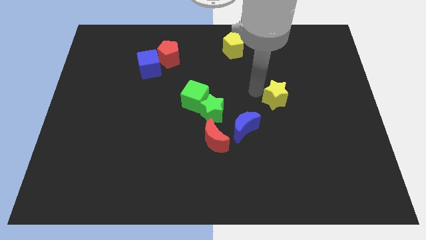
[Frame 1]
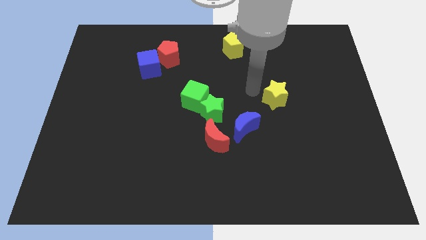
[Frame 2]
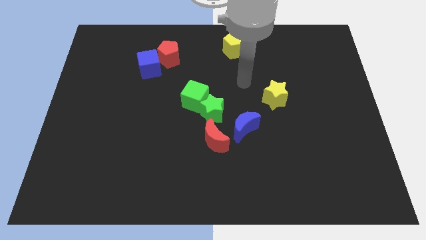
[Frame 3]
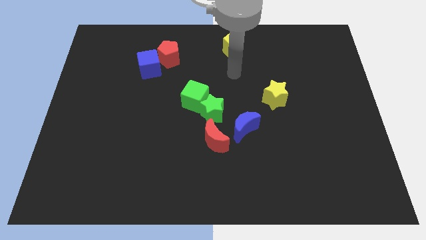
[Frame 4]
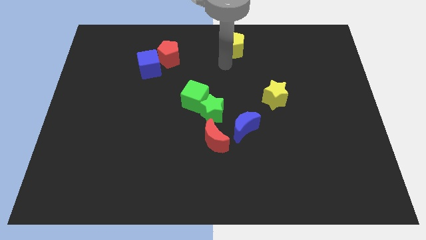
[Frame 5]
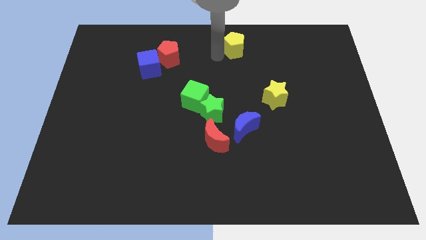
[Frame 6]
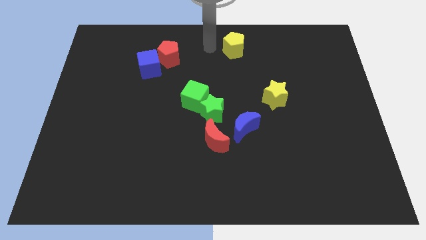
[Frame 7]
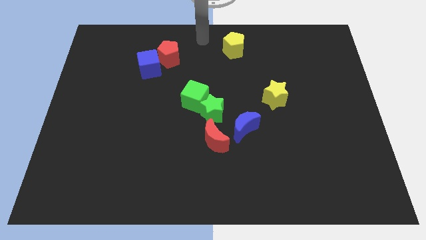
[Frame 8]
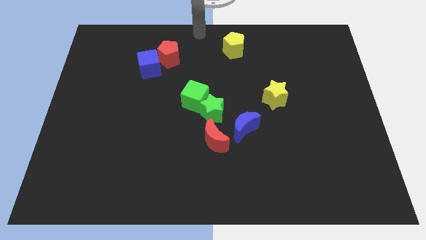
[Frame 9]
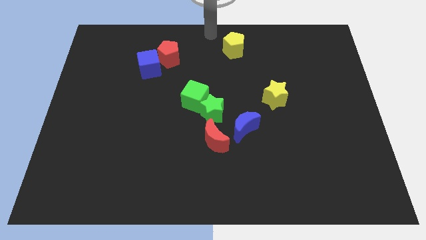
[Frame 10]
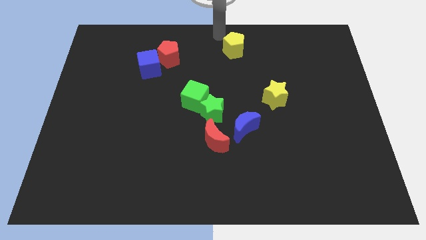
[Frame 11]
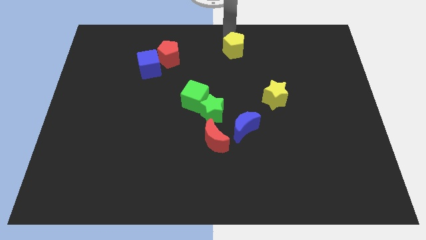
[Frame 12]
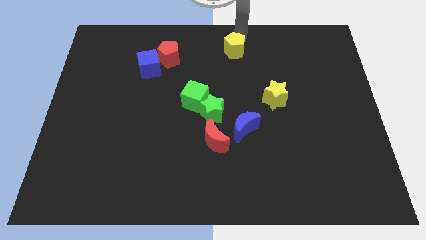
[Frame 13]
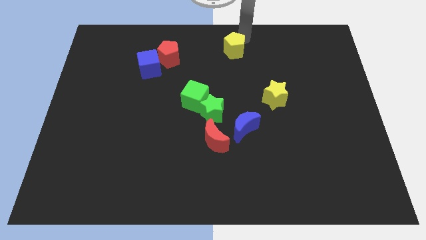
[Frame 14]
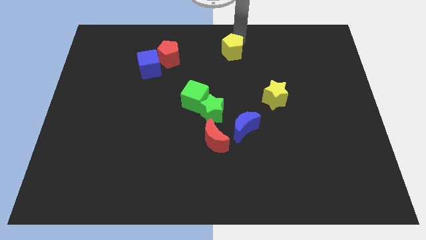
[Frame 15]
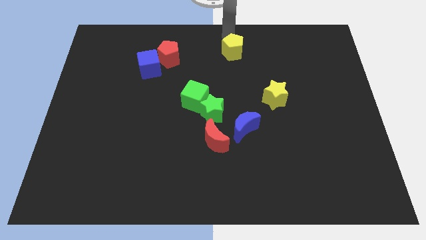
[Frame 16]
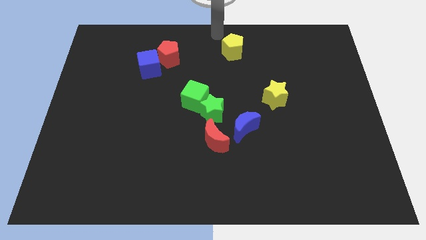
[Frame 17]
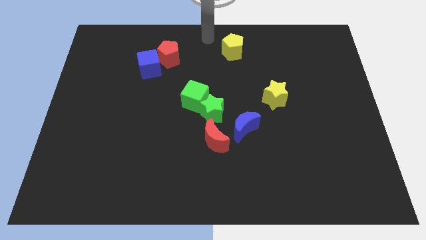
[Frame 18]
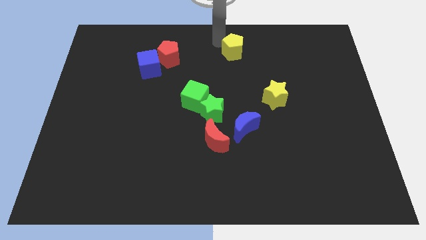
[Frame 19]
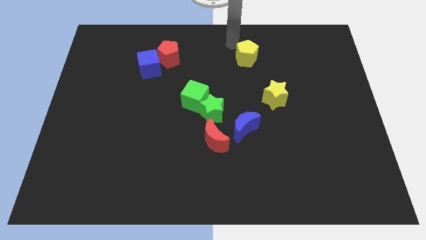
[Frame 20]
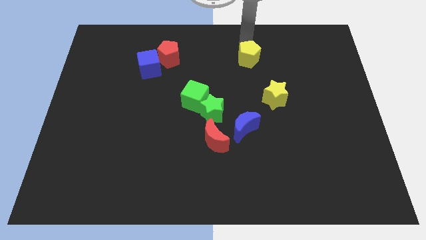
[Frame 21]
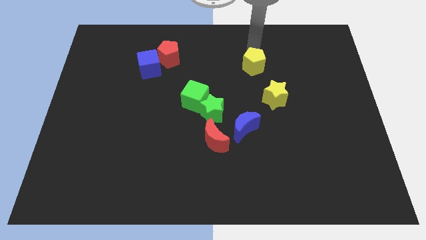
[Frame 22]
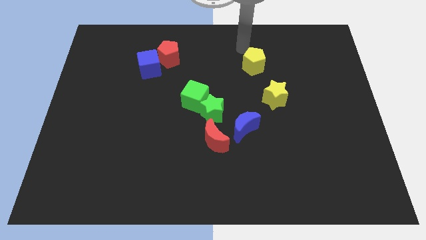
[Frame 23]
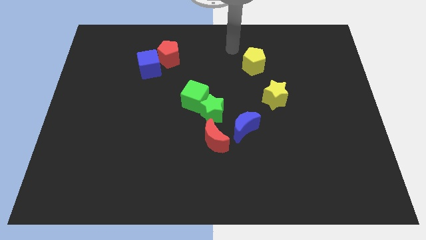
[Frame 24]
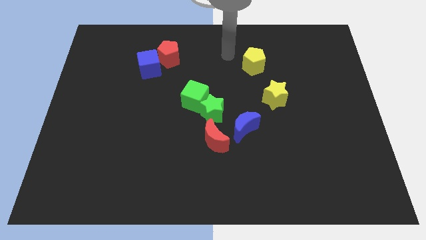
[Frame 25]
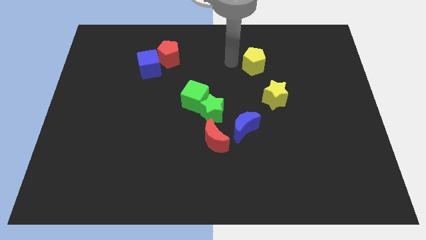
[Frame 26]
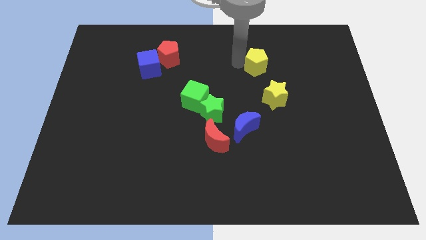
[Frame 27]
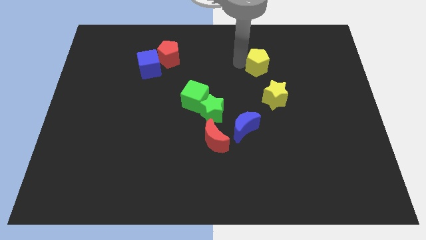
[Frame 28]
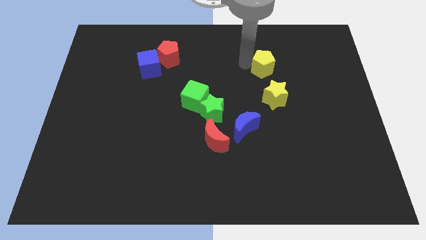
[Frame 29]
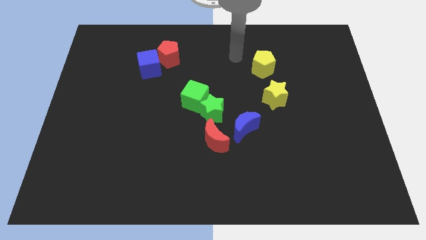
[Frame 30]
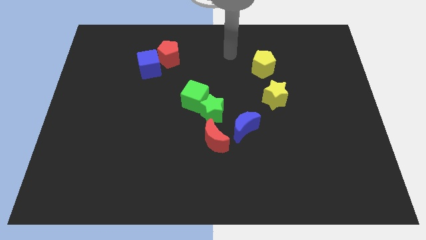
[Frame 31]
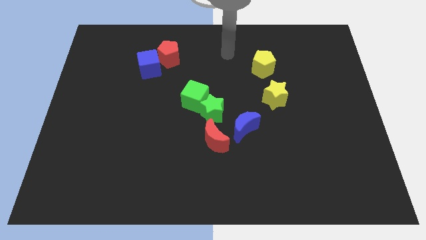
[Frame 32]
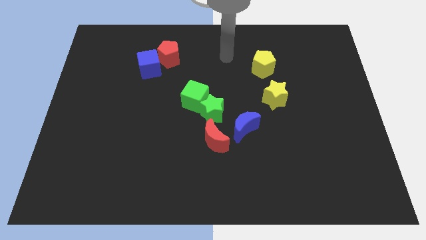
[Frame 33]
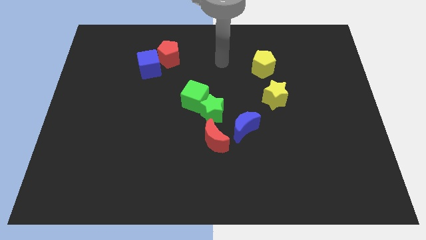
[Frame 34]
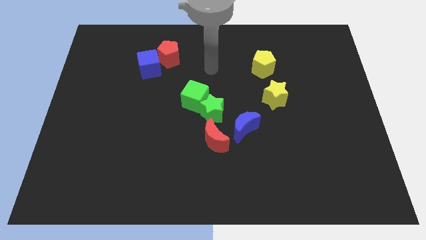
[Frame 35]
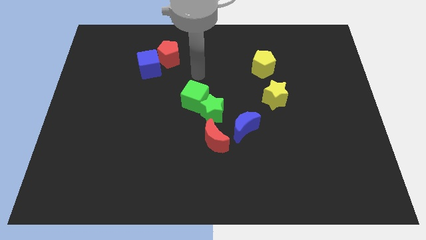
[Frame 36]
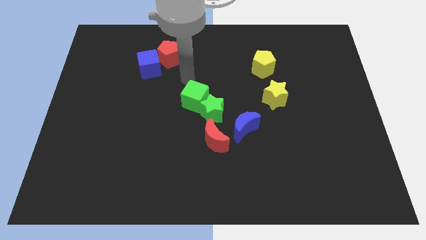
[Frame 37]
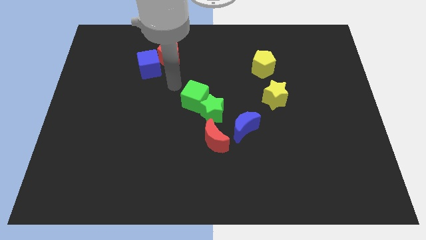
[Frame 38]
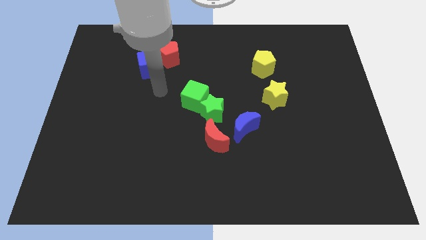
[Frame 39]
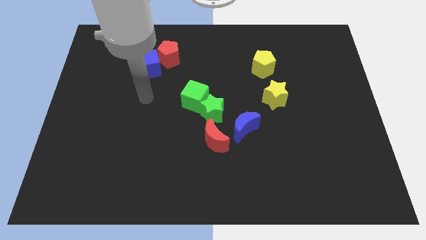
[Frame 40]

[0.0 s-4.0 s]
slide the yellow pentagon towards the yellow star

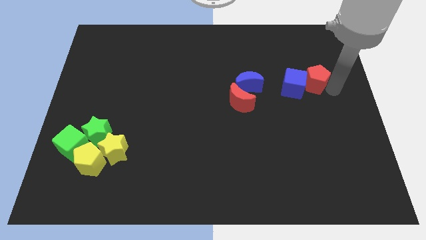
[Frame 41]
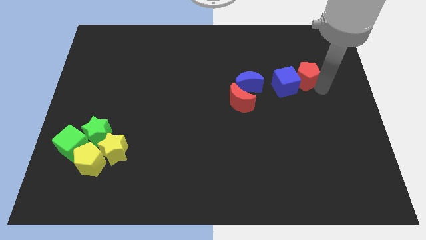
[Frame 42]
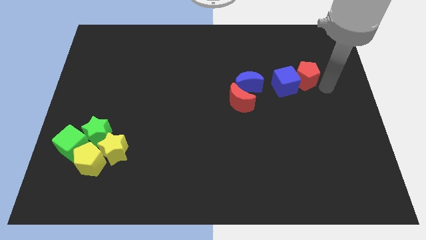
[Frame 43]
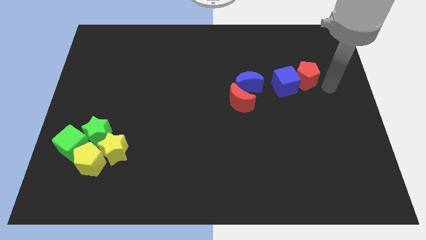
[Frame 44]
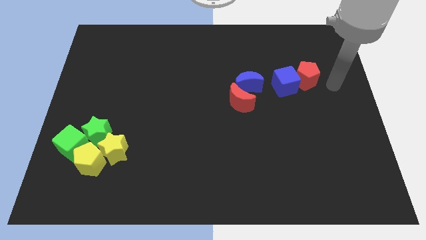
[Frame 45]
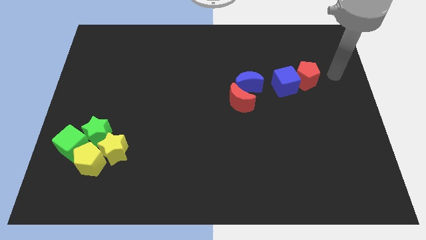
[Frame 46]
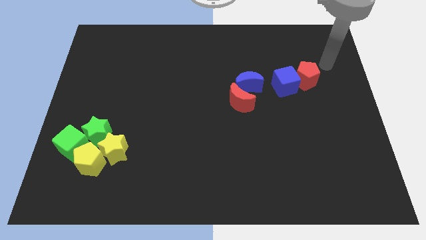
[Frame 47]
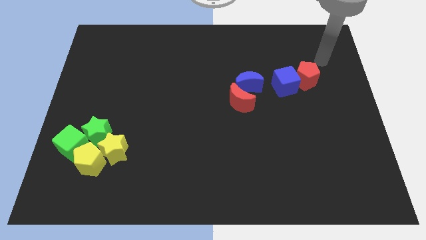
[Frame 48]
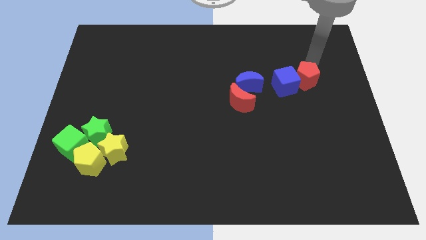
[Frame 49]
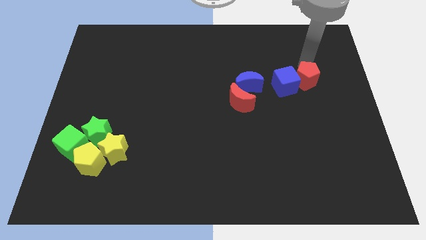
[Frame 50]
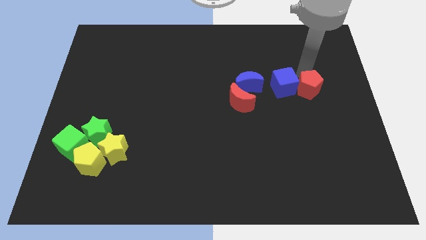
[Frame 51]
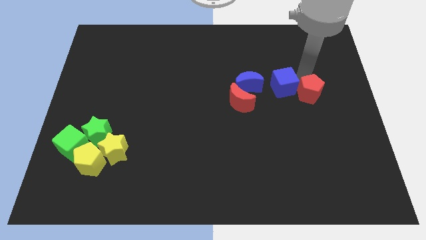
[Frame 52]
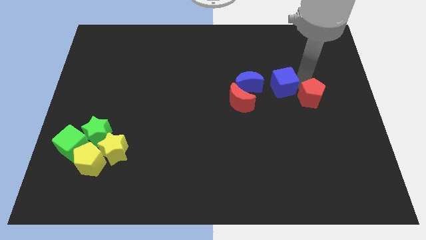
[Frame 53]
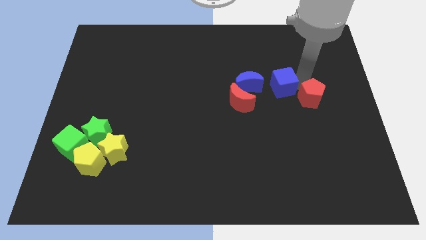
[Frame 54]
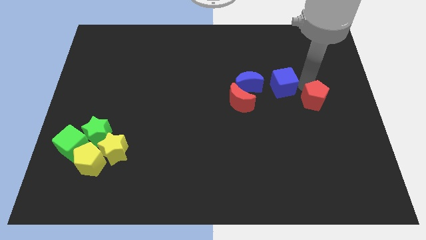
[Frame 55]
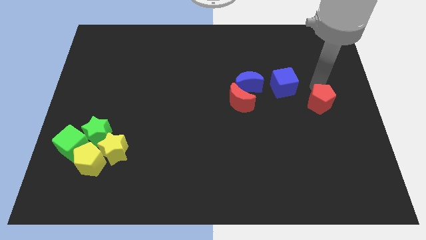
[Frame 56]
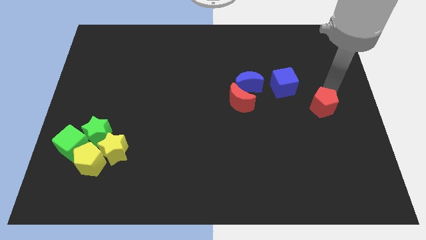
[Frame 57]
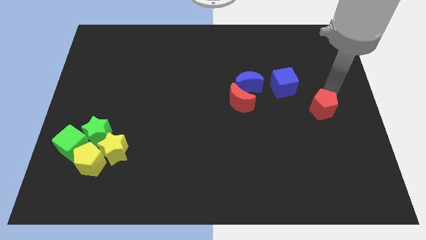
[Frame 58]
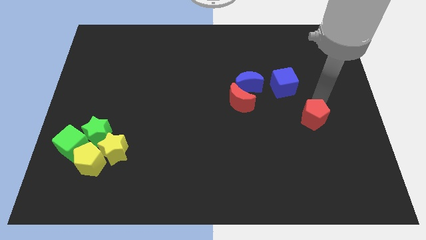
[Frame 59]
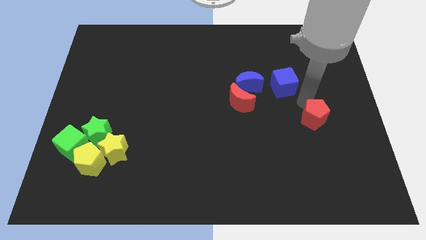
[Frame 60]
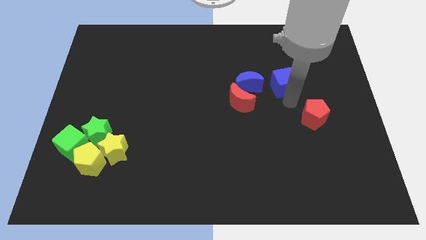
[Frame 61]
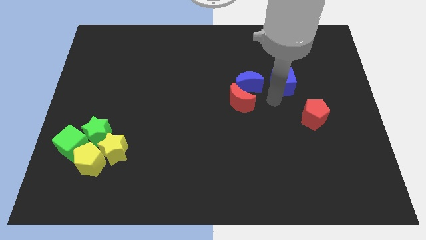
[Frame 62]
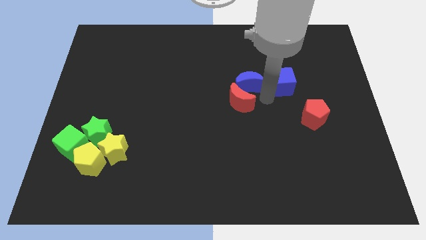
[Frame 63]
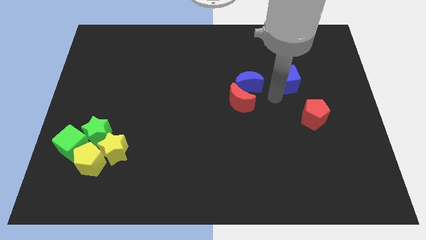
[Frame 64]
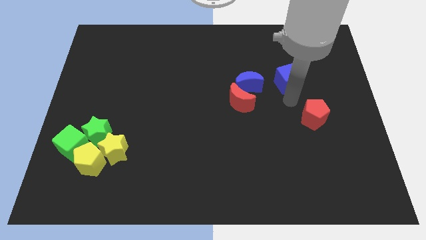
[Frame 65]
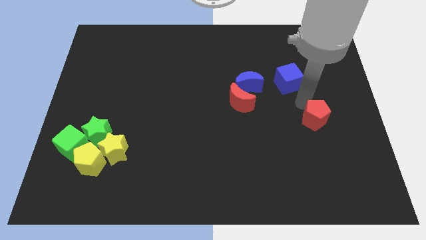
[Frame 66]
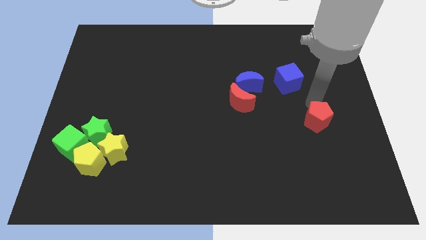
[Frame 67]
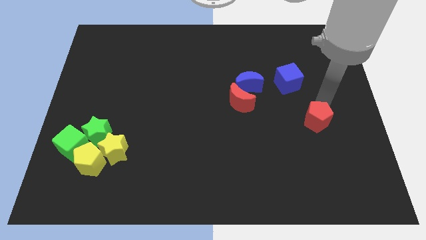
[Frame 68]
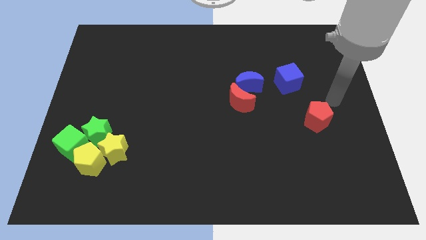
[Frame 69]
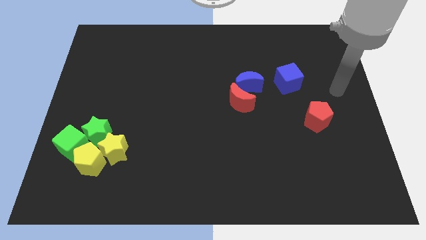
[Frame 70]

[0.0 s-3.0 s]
move the red pentagon diagonally to the bottom right the board

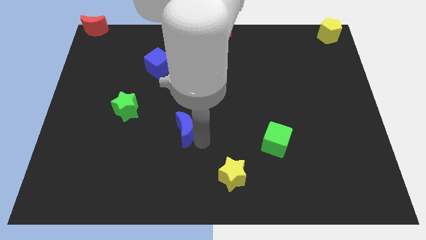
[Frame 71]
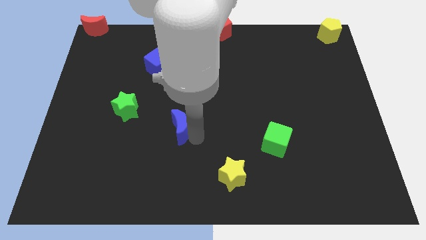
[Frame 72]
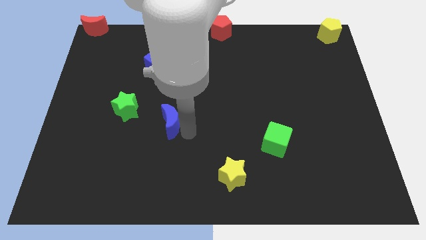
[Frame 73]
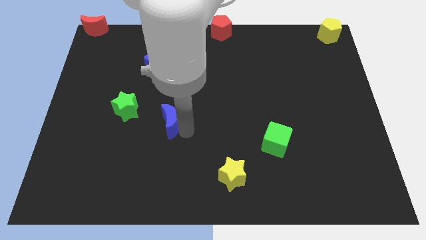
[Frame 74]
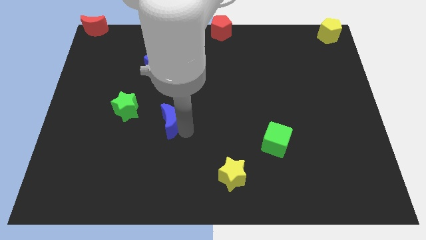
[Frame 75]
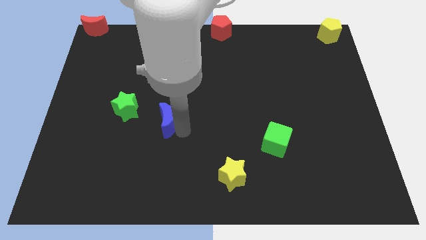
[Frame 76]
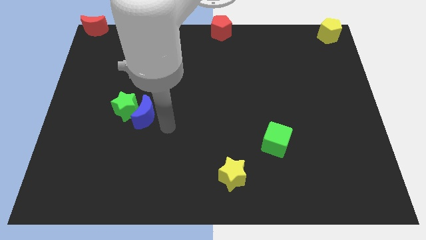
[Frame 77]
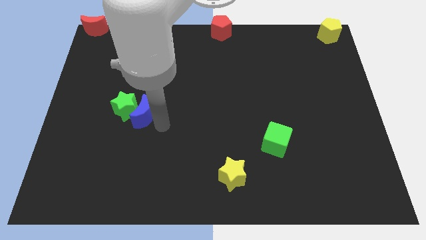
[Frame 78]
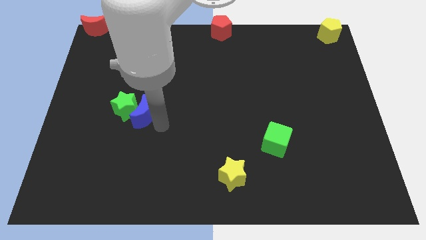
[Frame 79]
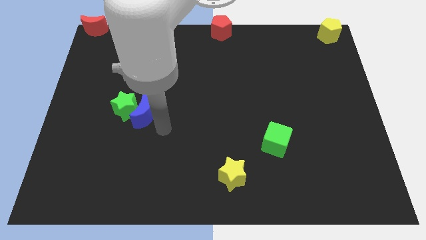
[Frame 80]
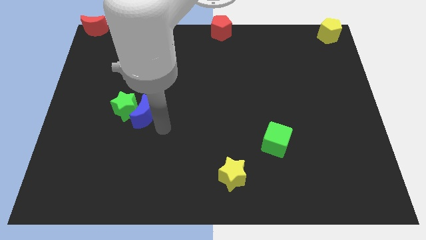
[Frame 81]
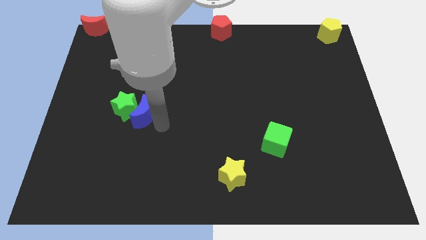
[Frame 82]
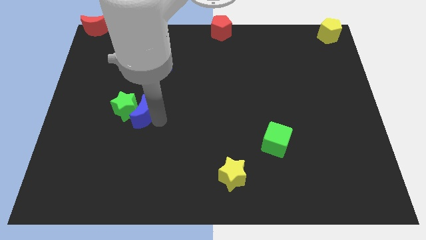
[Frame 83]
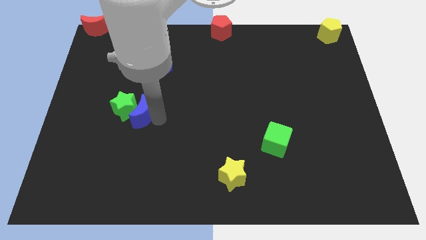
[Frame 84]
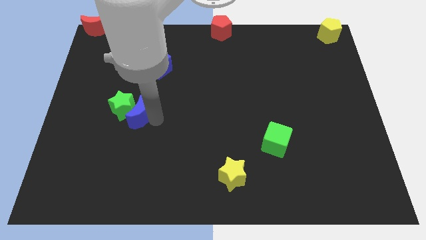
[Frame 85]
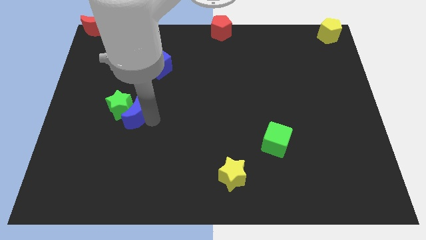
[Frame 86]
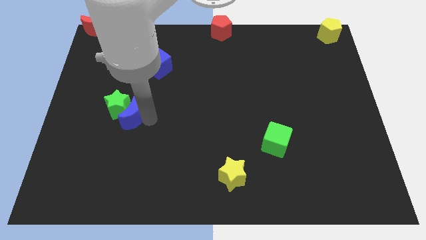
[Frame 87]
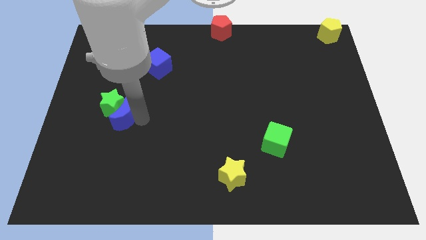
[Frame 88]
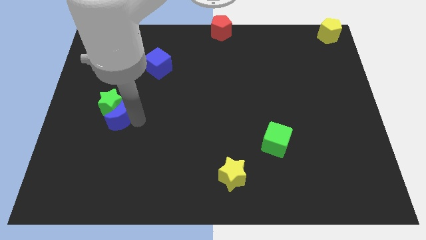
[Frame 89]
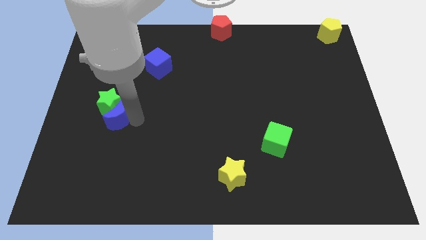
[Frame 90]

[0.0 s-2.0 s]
move the blue crescent along with green star towards left
